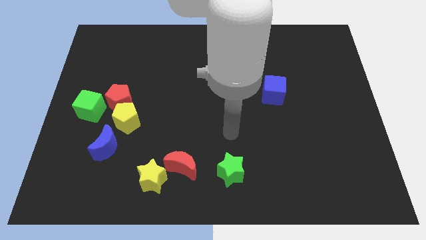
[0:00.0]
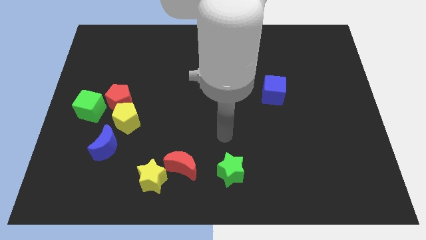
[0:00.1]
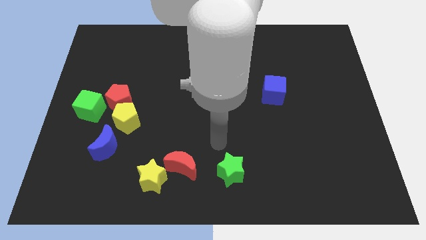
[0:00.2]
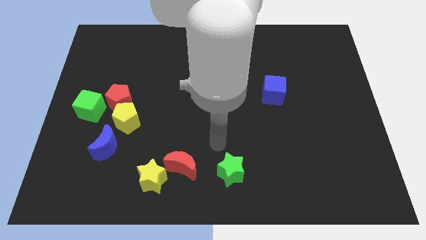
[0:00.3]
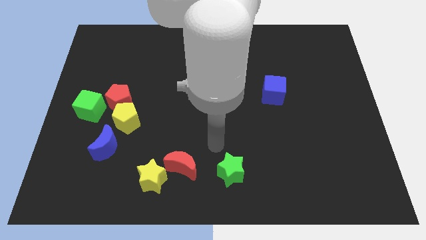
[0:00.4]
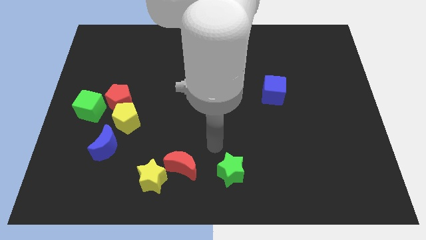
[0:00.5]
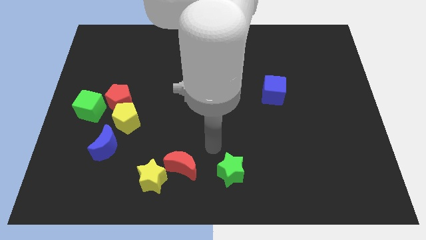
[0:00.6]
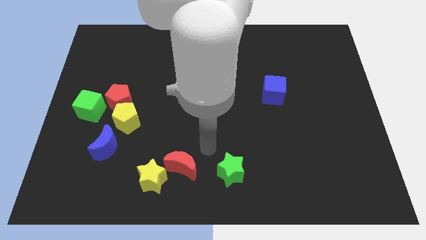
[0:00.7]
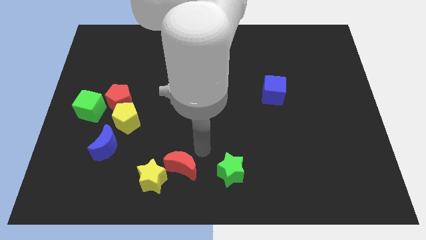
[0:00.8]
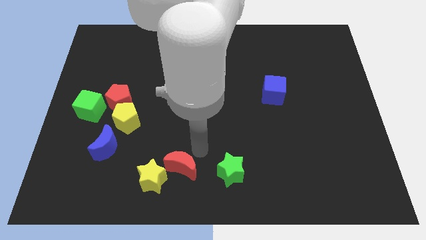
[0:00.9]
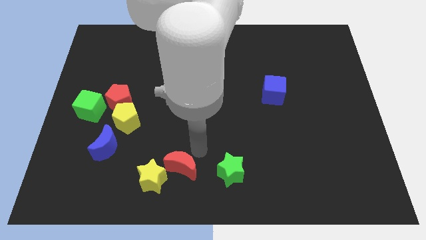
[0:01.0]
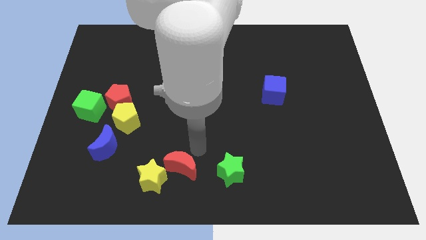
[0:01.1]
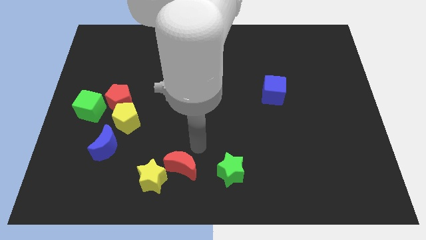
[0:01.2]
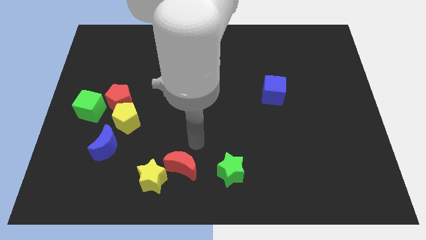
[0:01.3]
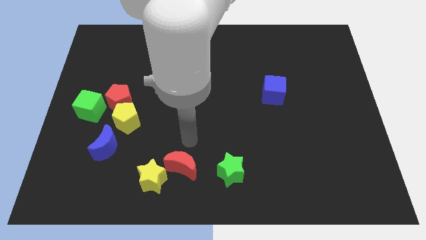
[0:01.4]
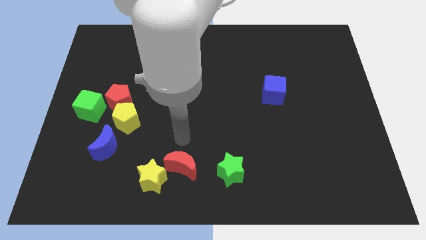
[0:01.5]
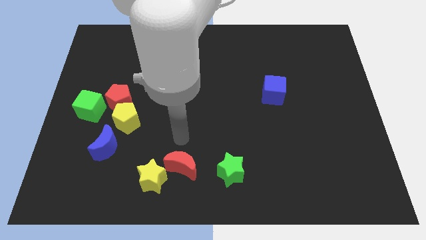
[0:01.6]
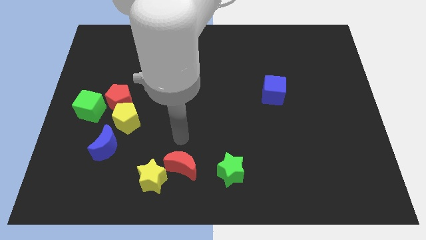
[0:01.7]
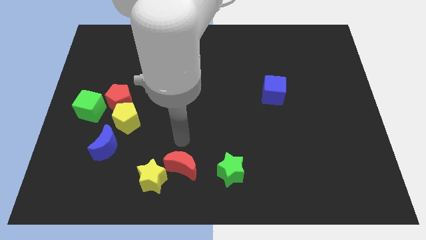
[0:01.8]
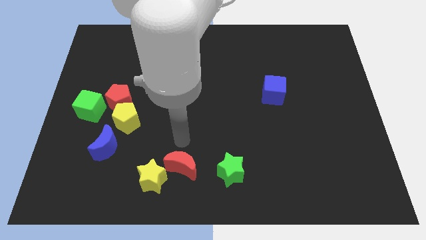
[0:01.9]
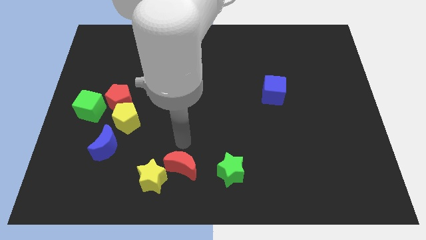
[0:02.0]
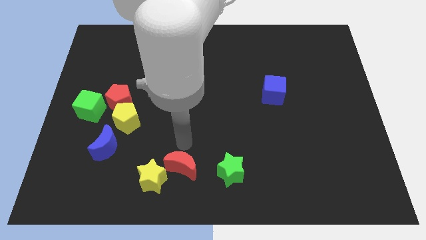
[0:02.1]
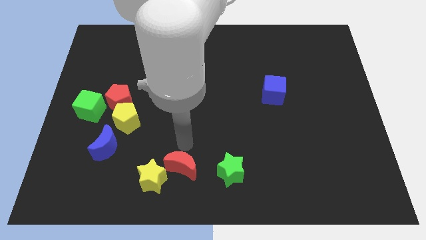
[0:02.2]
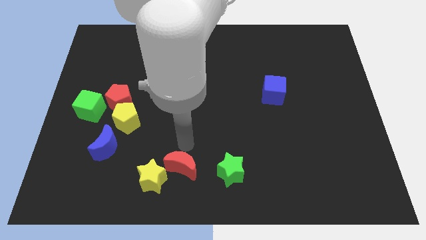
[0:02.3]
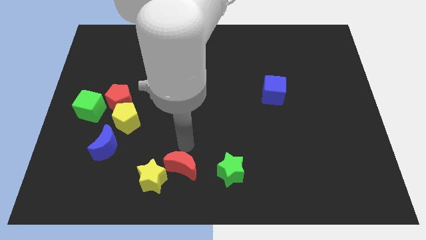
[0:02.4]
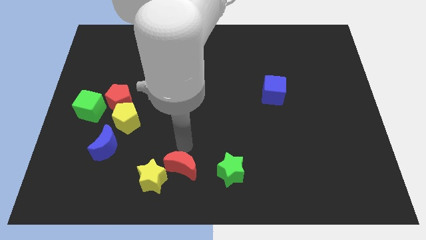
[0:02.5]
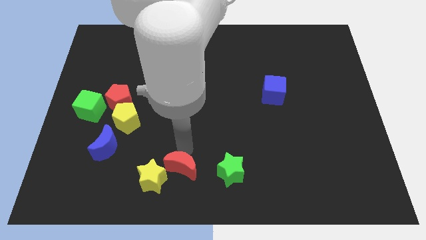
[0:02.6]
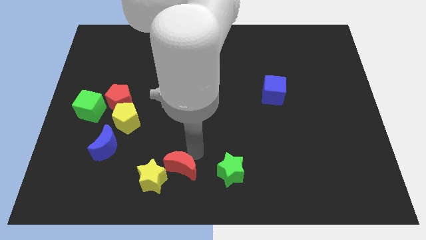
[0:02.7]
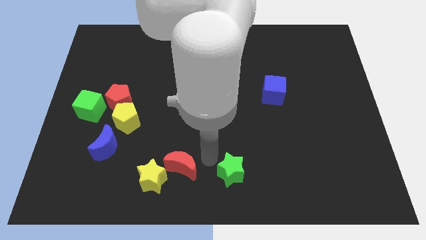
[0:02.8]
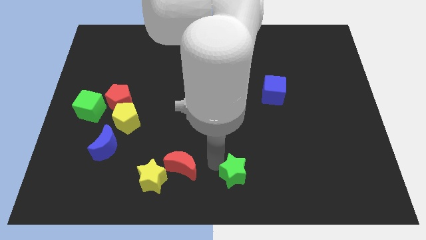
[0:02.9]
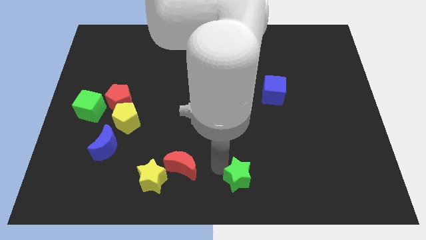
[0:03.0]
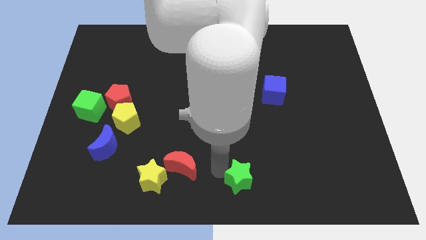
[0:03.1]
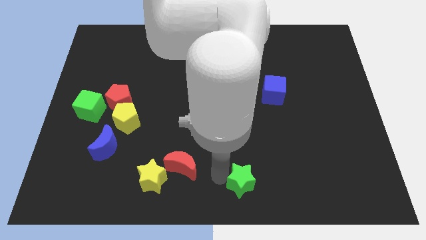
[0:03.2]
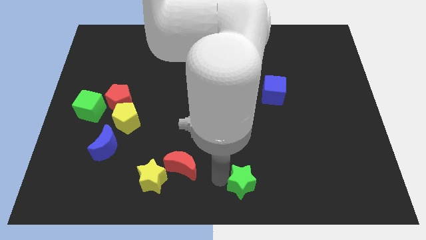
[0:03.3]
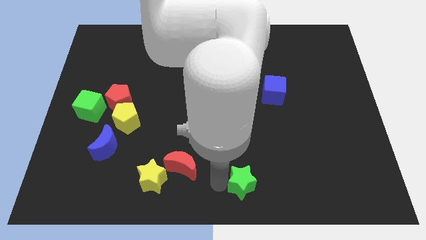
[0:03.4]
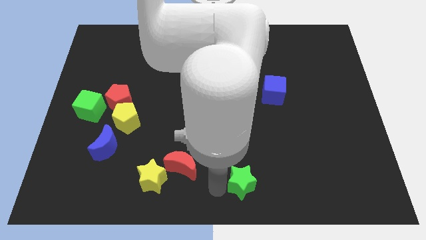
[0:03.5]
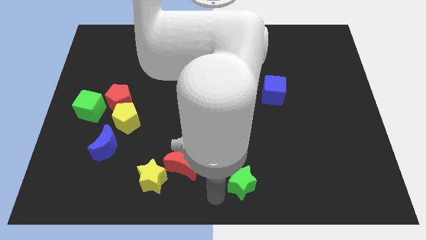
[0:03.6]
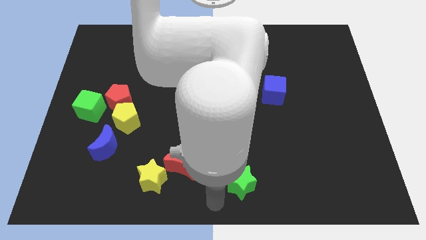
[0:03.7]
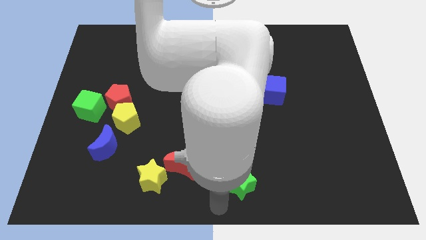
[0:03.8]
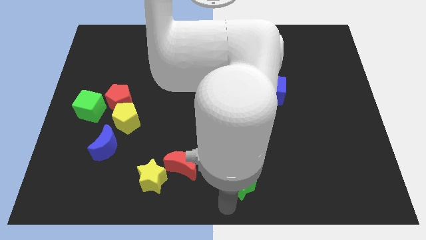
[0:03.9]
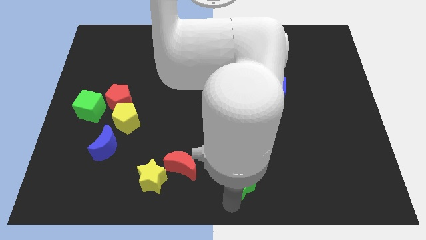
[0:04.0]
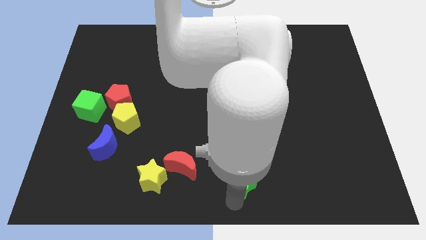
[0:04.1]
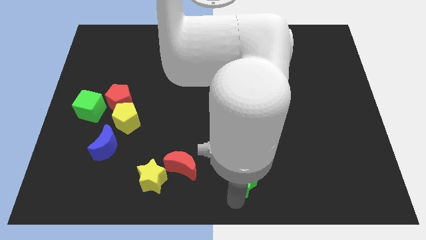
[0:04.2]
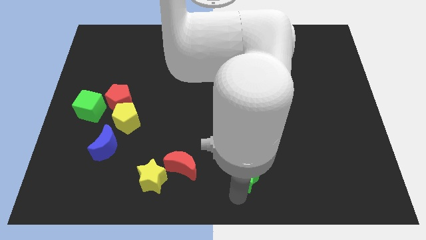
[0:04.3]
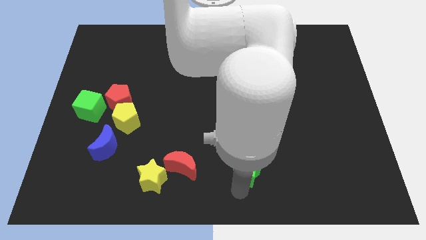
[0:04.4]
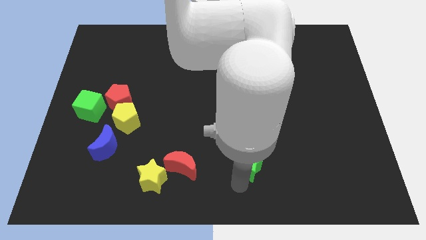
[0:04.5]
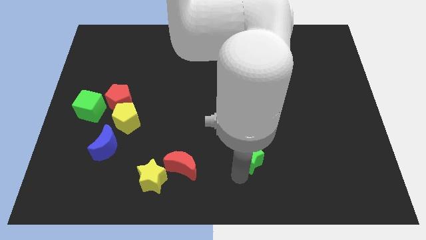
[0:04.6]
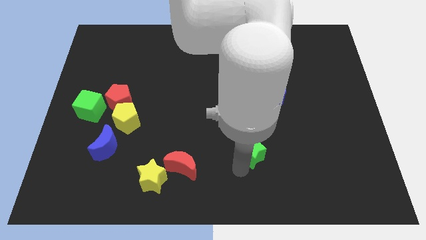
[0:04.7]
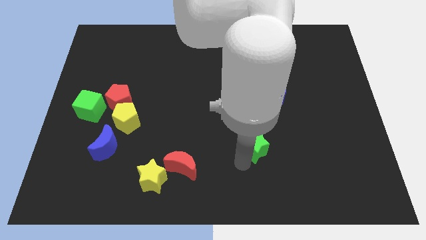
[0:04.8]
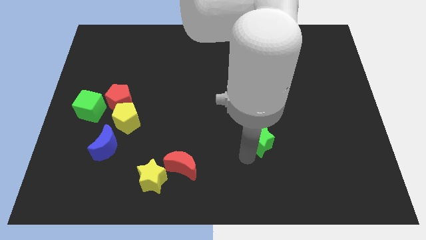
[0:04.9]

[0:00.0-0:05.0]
move the green star diagonally top right to the red crescent

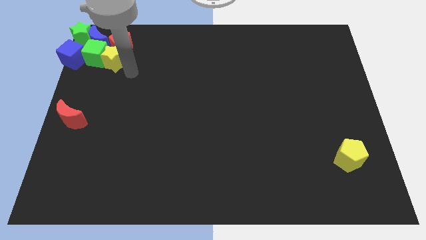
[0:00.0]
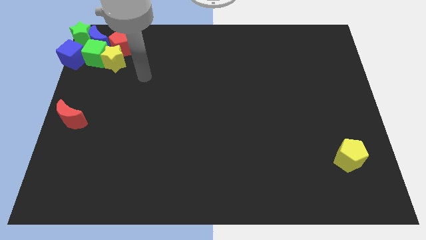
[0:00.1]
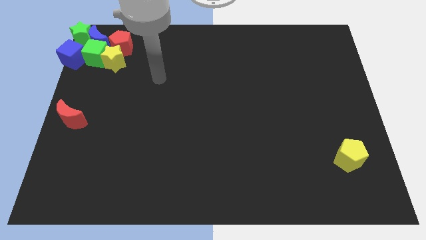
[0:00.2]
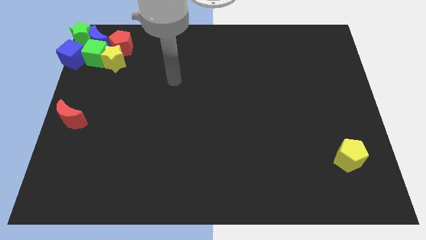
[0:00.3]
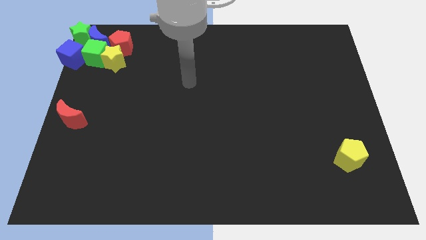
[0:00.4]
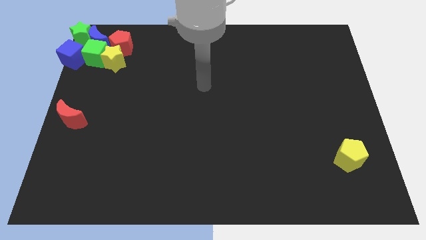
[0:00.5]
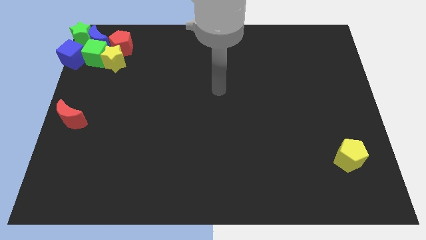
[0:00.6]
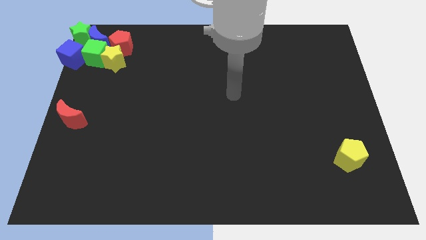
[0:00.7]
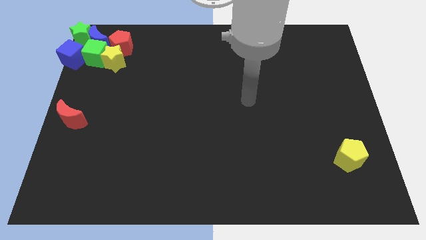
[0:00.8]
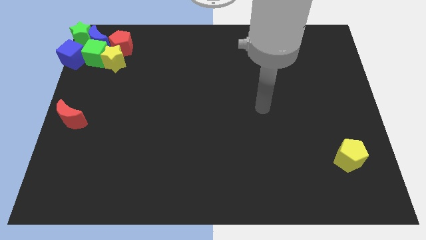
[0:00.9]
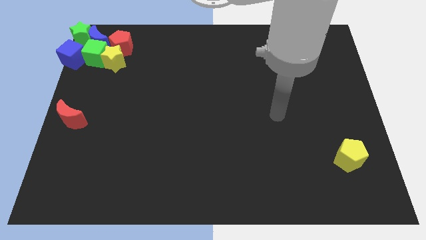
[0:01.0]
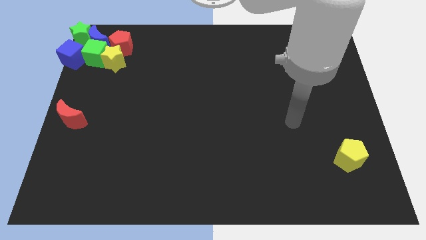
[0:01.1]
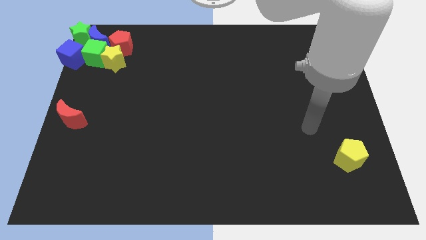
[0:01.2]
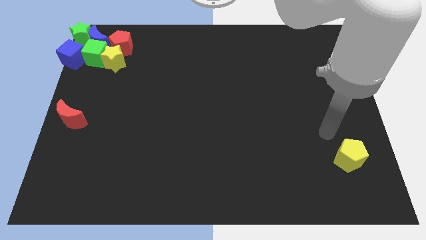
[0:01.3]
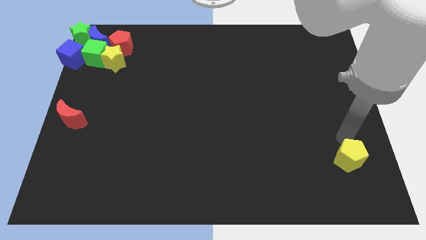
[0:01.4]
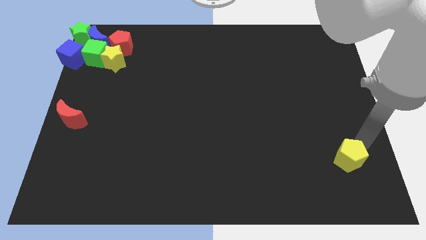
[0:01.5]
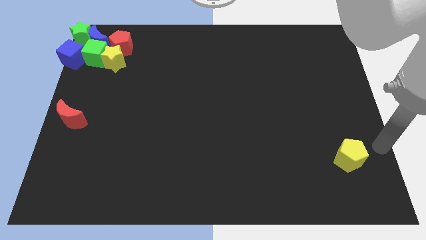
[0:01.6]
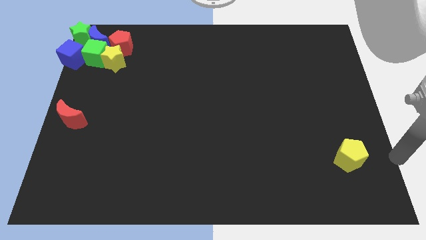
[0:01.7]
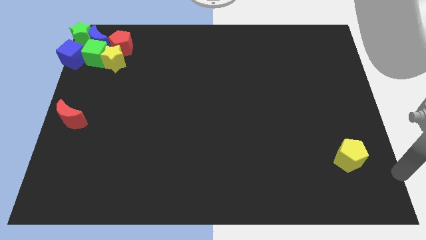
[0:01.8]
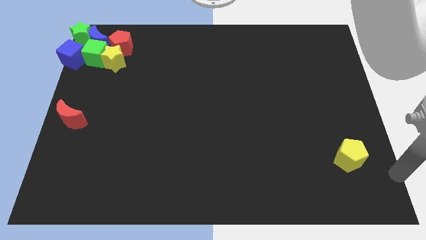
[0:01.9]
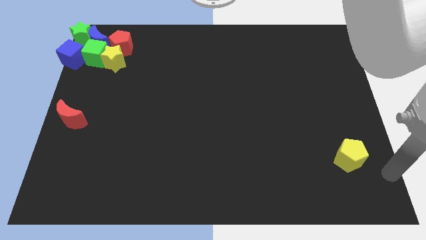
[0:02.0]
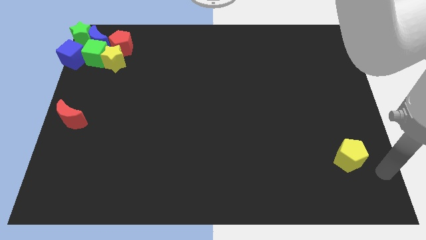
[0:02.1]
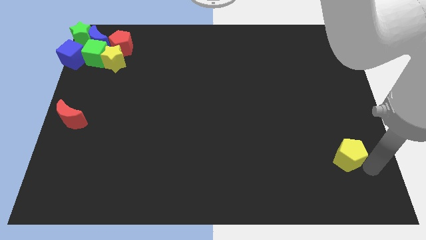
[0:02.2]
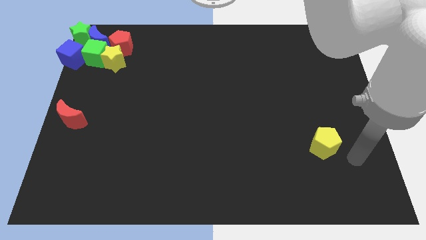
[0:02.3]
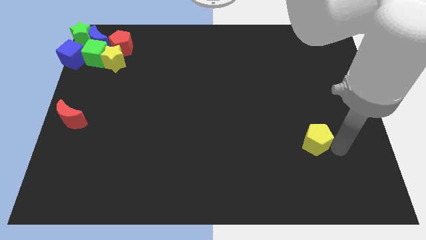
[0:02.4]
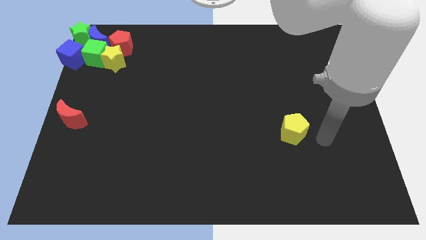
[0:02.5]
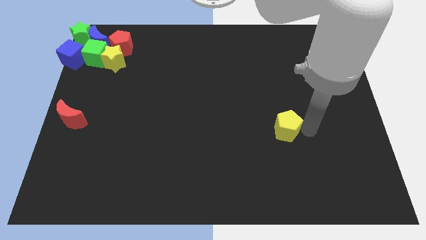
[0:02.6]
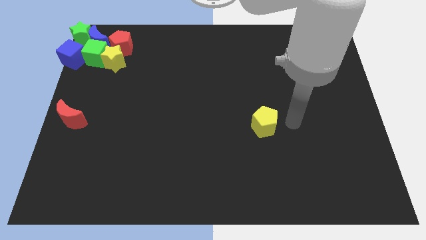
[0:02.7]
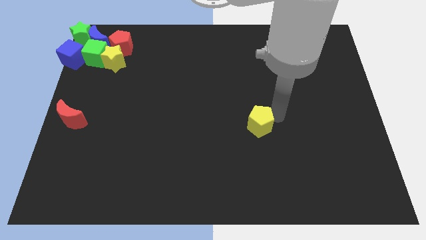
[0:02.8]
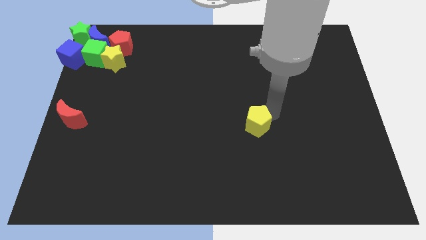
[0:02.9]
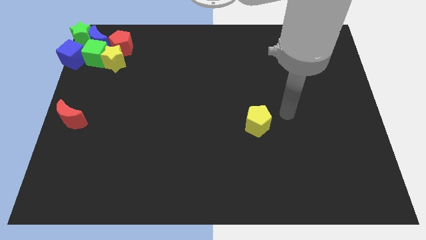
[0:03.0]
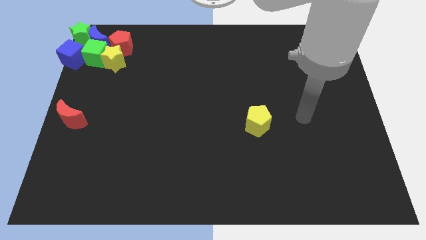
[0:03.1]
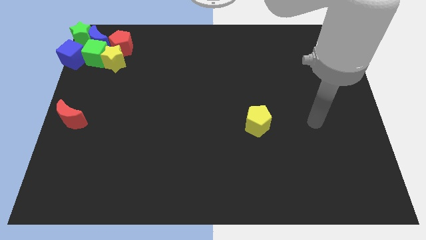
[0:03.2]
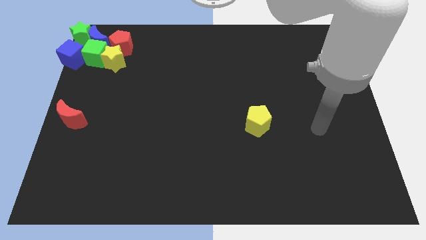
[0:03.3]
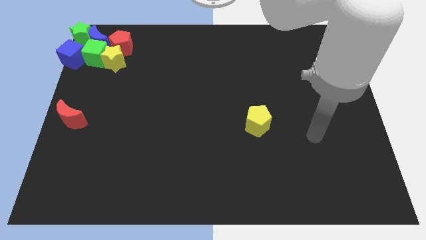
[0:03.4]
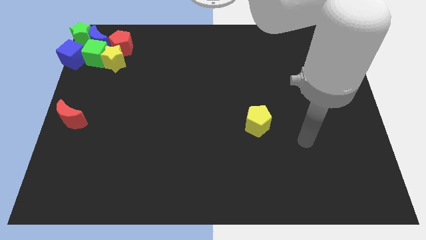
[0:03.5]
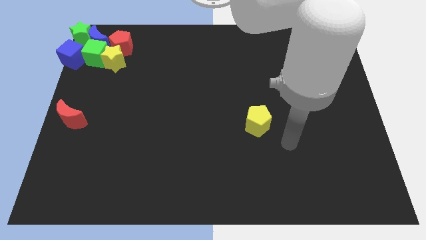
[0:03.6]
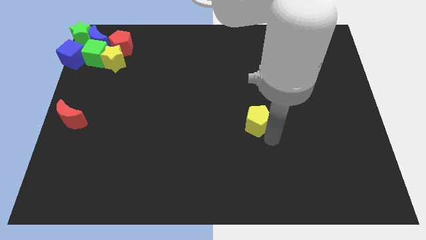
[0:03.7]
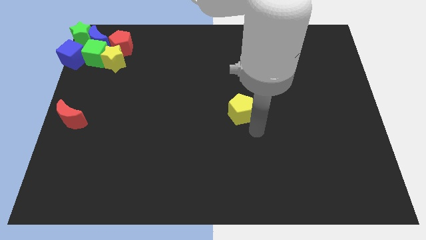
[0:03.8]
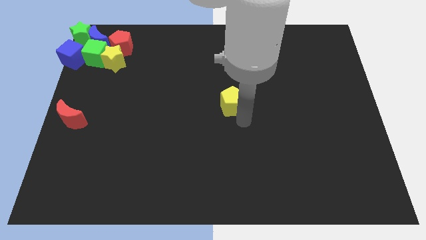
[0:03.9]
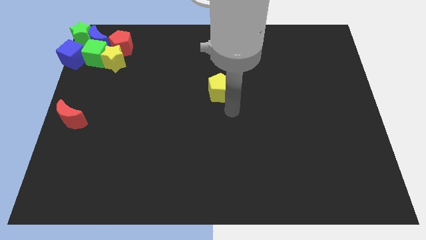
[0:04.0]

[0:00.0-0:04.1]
push the yellow pentagon to the center
